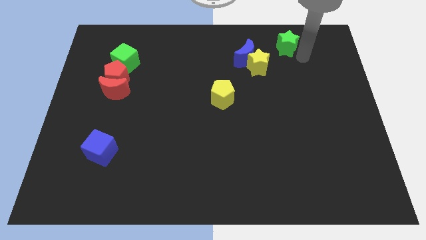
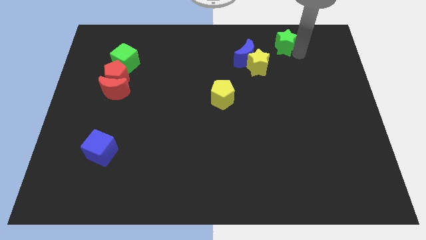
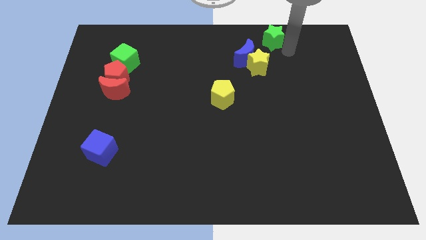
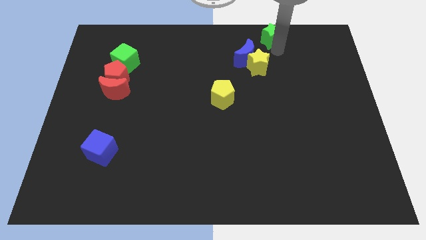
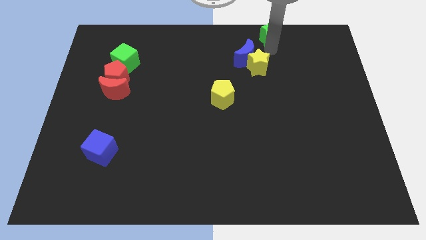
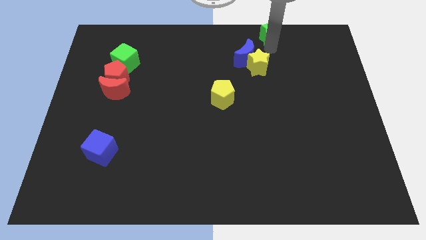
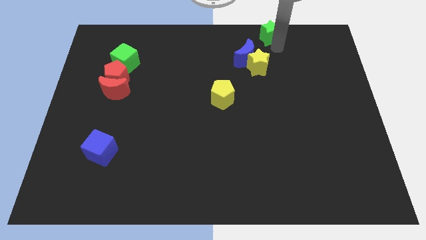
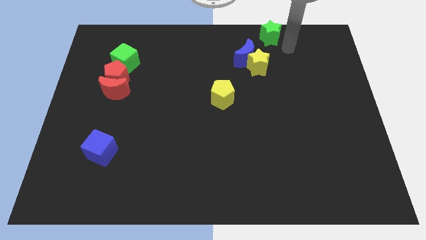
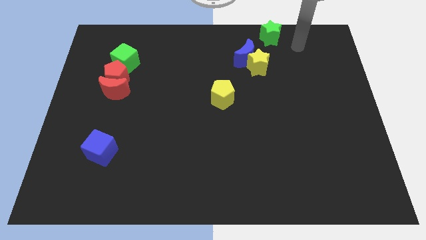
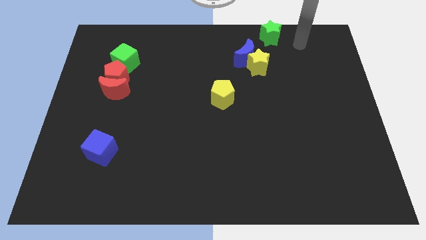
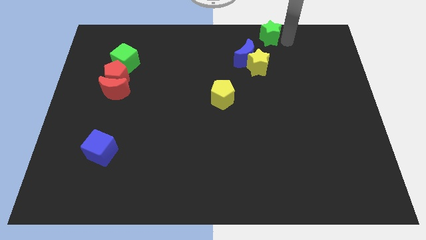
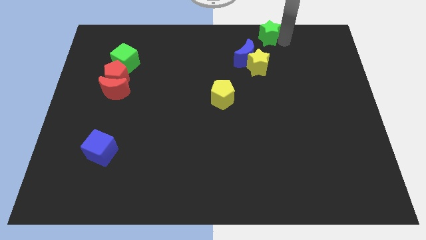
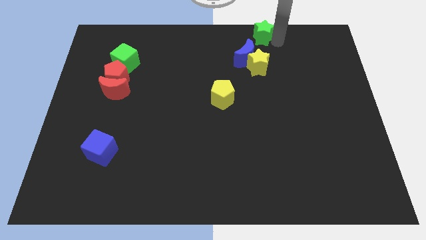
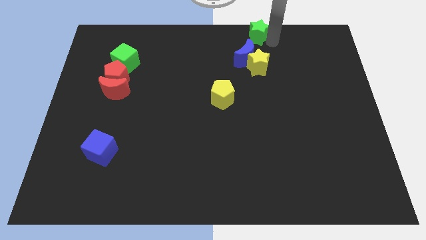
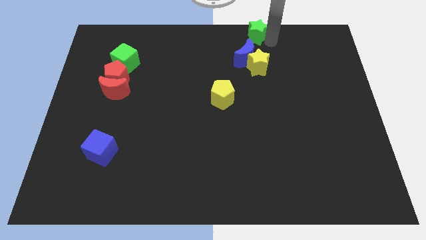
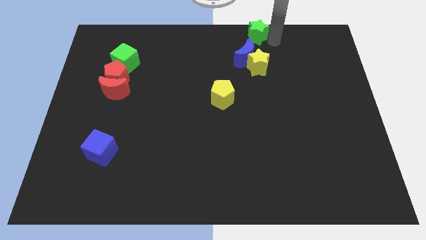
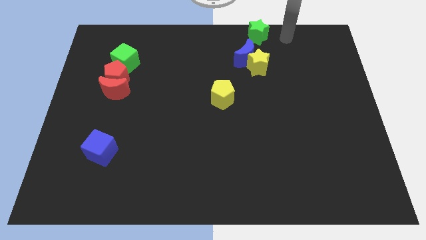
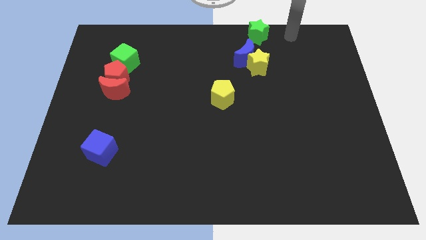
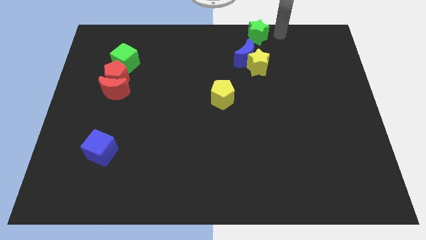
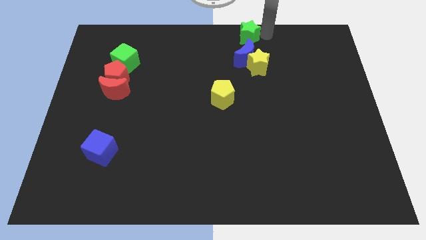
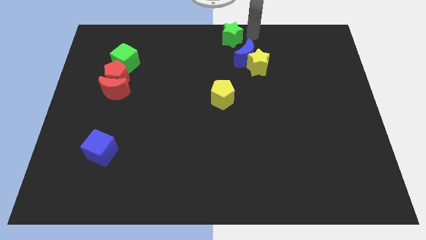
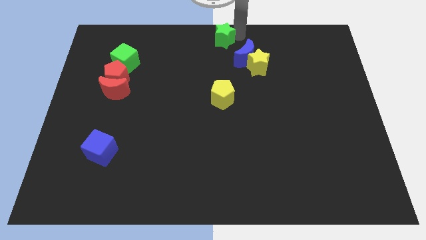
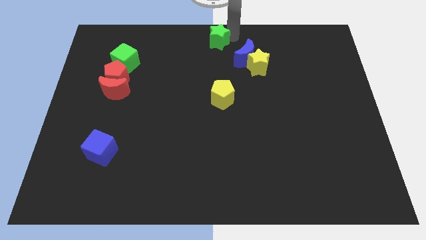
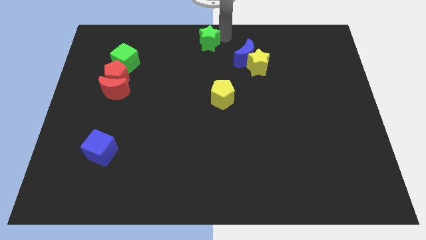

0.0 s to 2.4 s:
push the green star to the top center

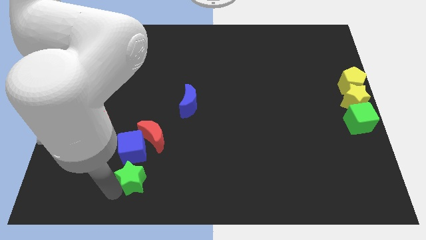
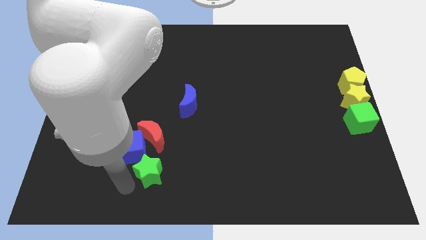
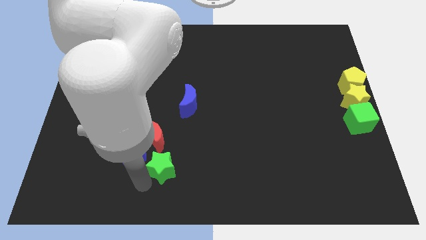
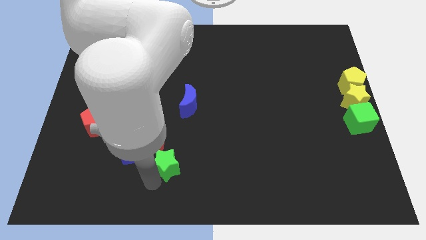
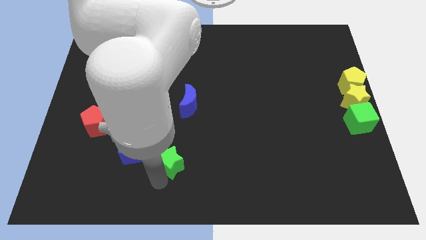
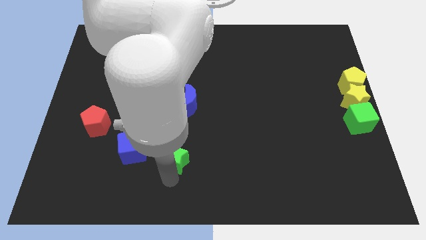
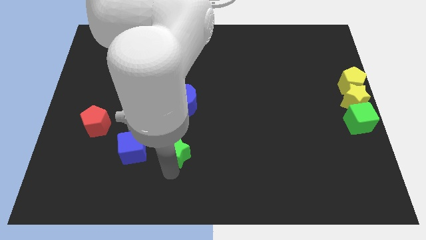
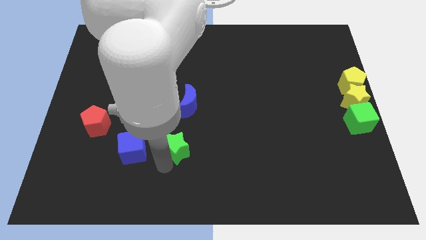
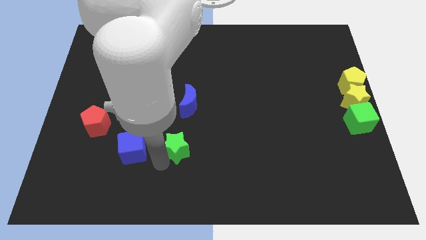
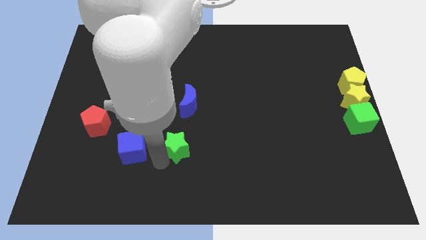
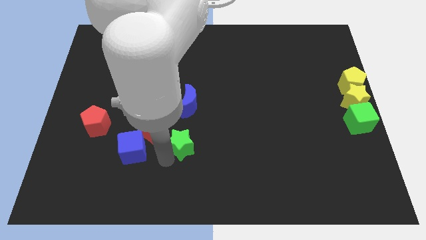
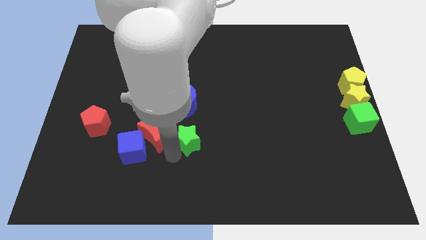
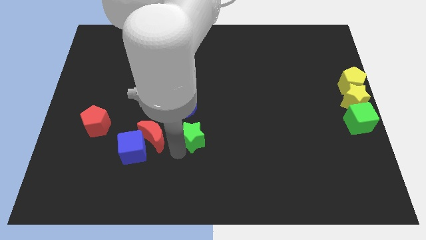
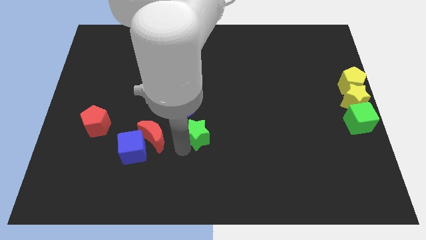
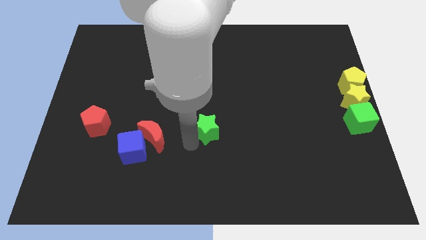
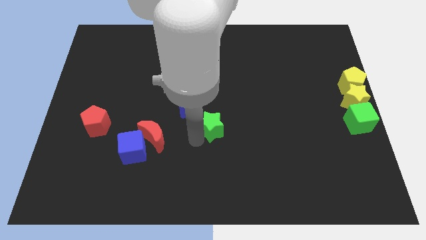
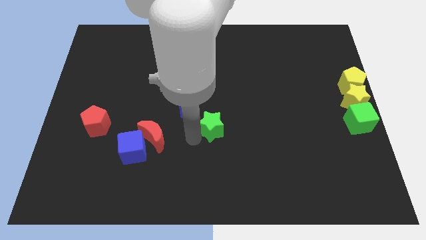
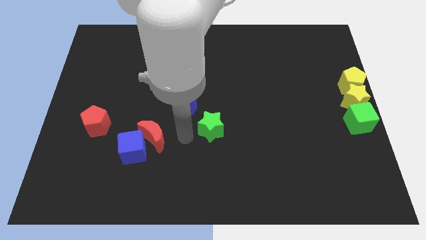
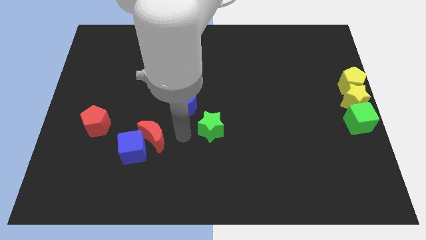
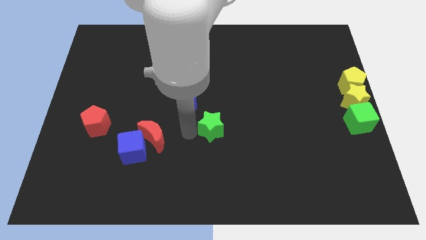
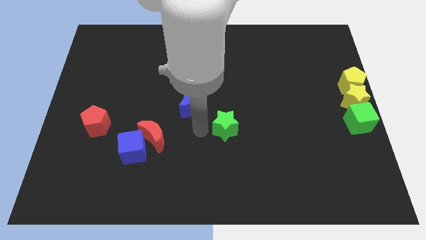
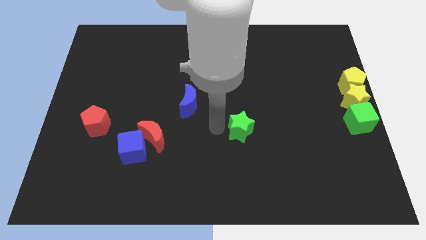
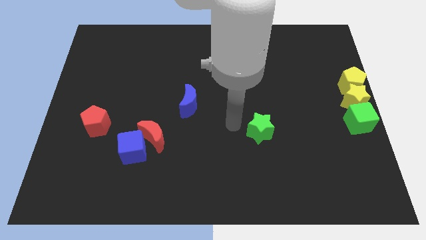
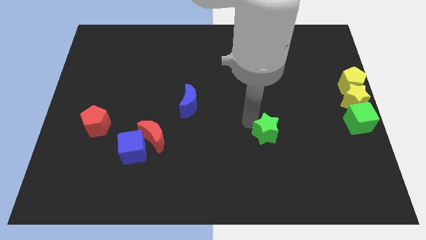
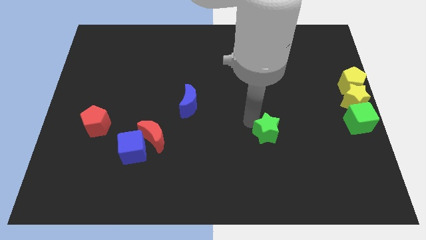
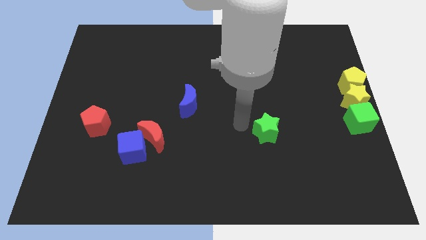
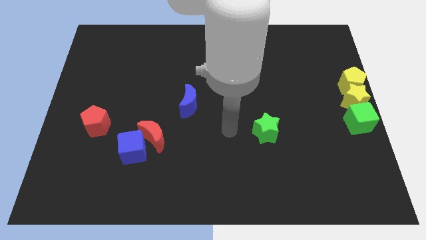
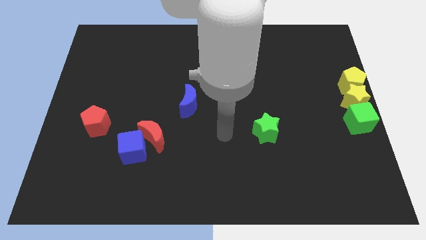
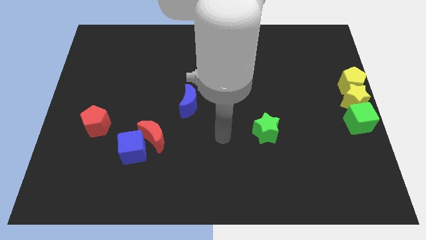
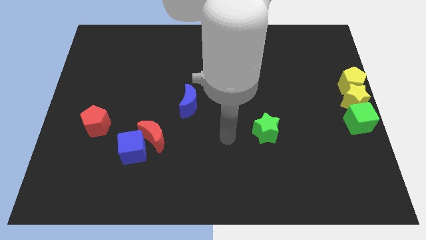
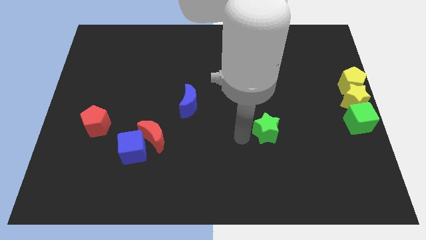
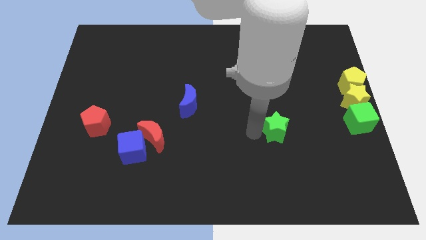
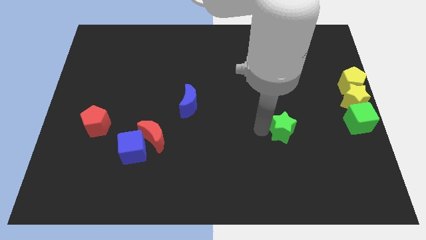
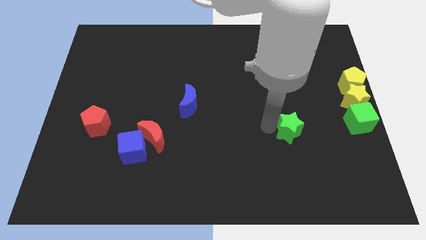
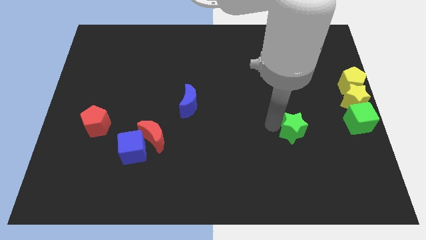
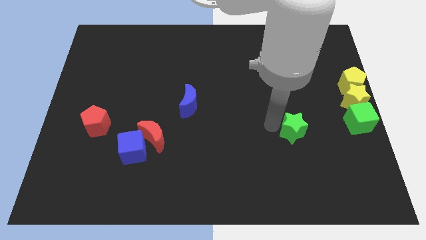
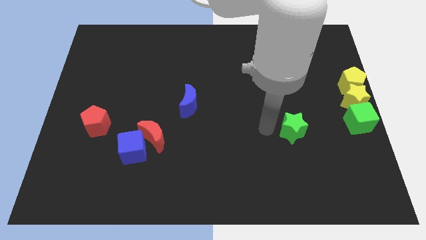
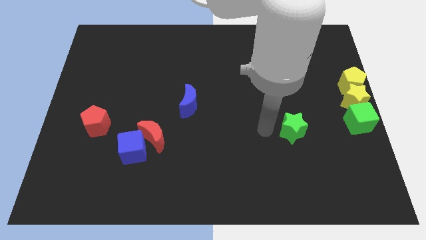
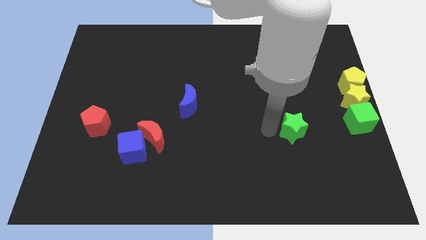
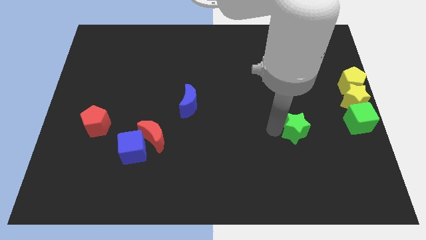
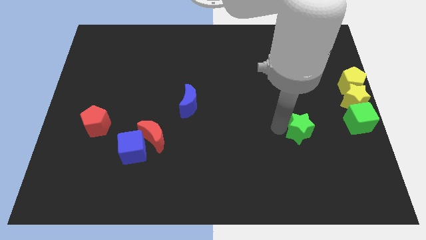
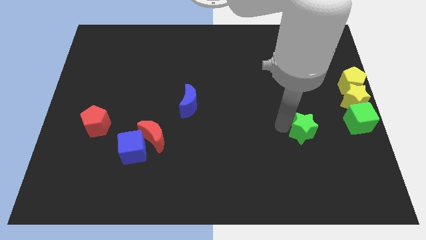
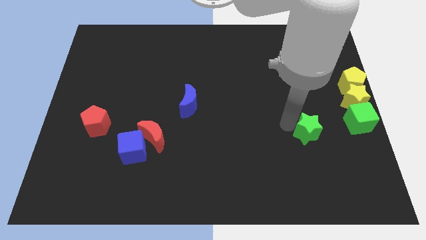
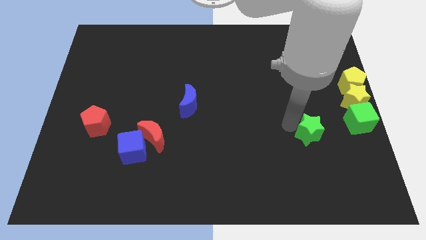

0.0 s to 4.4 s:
push the green star towards the left side of the green cube

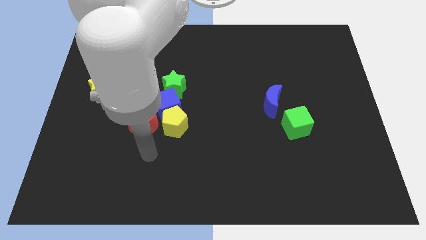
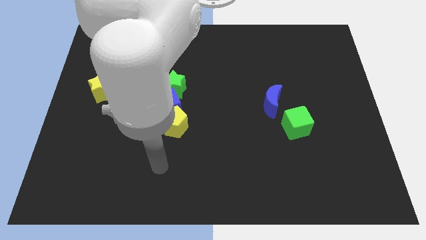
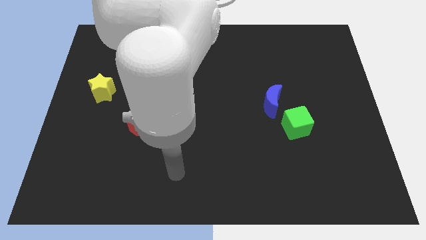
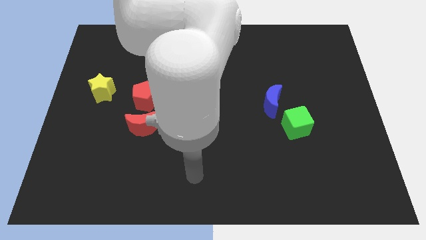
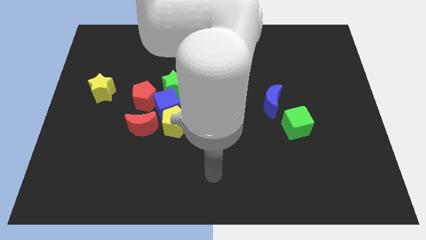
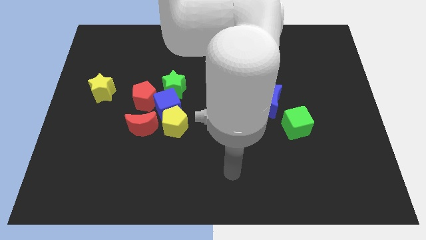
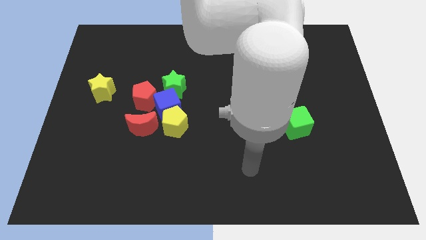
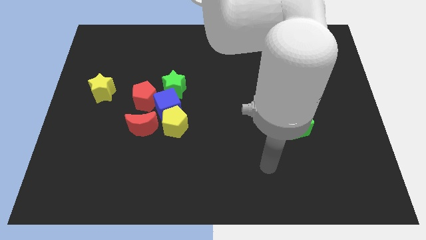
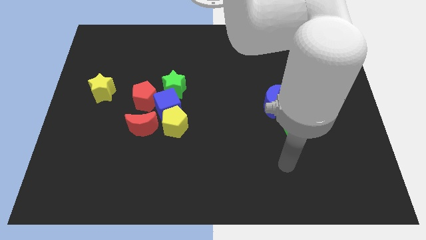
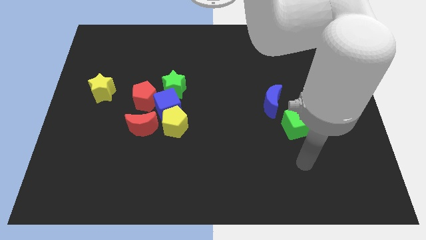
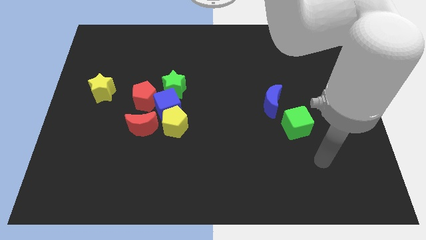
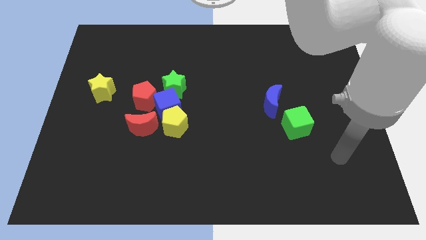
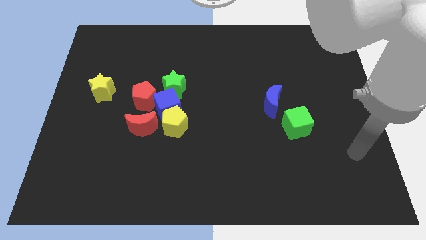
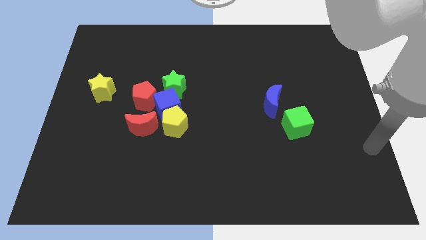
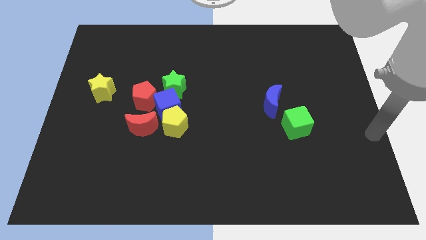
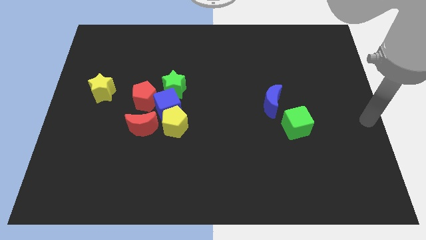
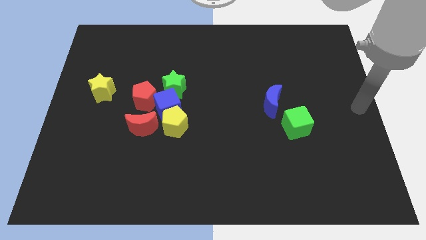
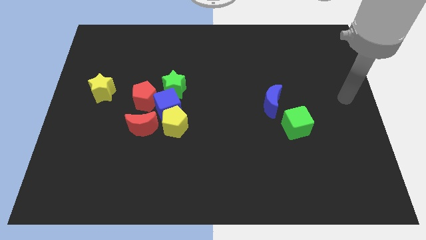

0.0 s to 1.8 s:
point your arm at the center right of the board

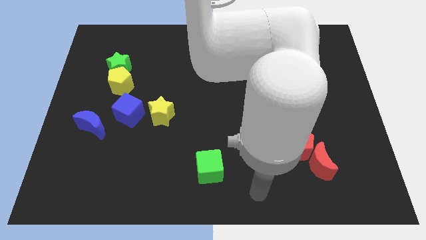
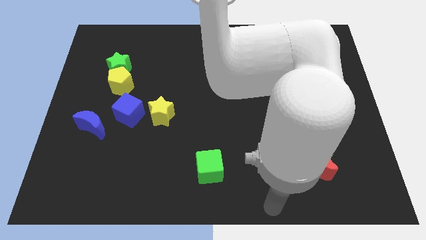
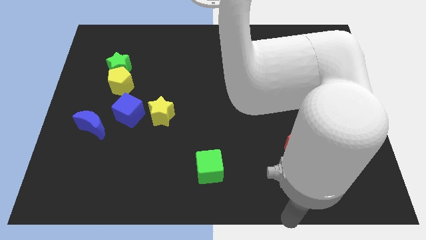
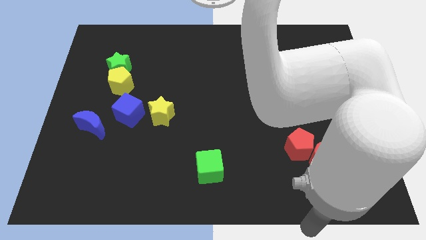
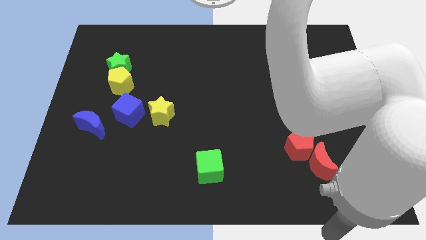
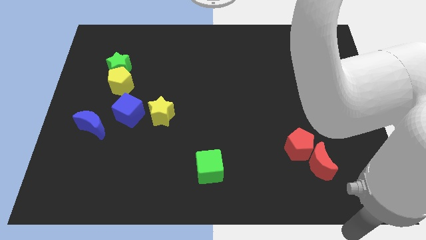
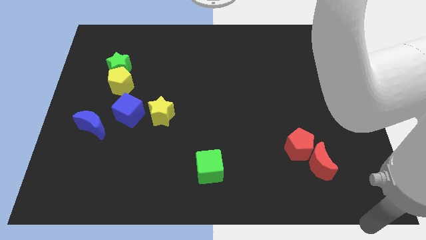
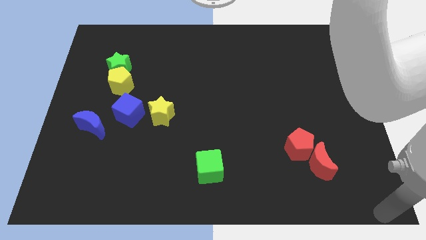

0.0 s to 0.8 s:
push the arm to the bottom right
